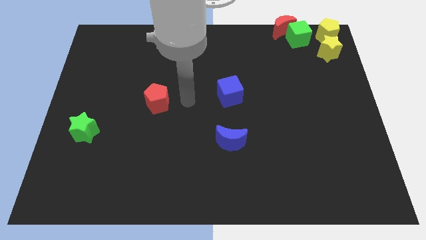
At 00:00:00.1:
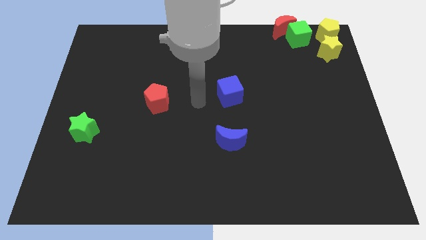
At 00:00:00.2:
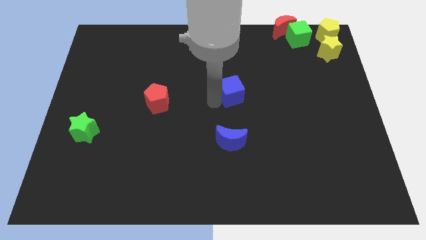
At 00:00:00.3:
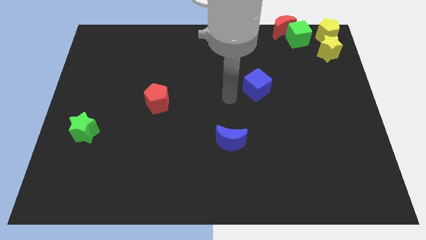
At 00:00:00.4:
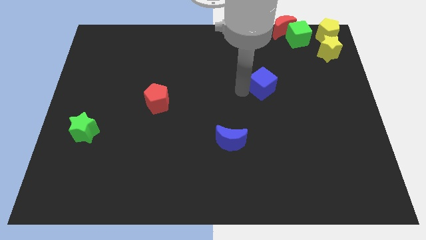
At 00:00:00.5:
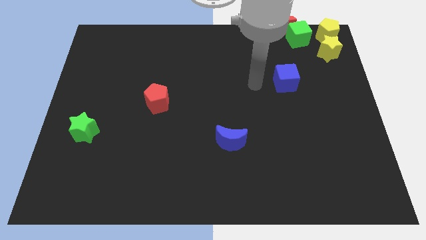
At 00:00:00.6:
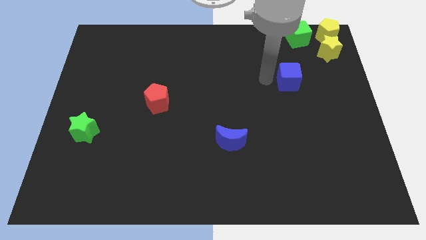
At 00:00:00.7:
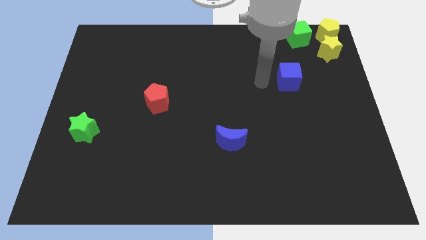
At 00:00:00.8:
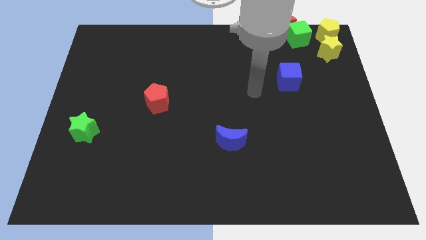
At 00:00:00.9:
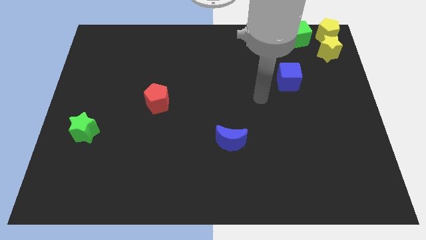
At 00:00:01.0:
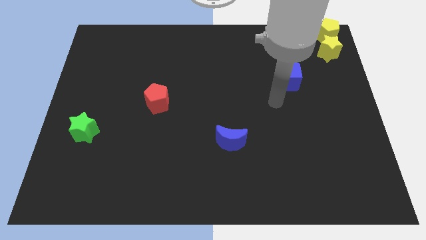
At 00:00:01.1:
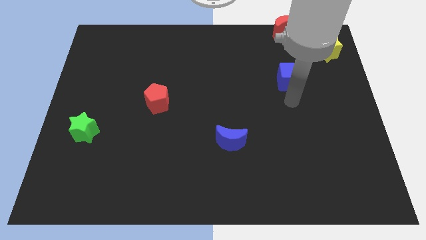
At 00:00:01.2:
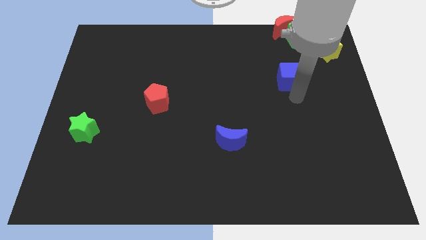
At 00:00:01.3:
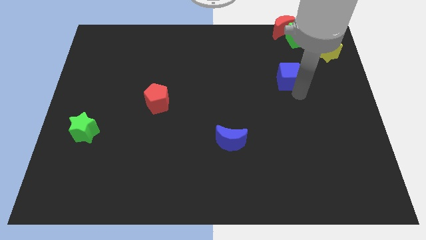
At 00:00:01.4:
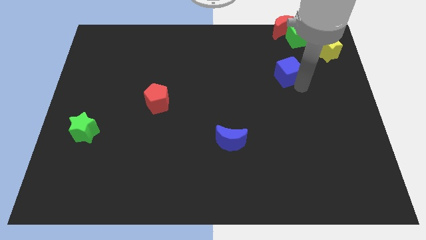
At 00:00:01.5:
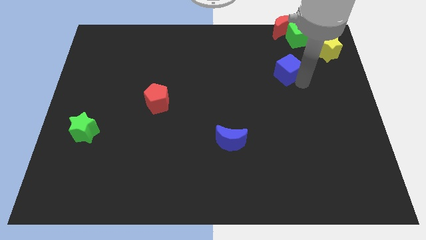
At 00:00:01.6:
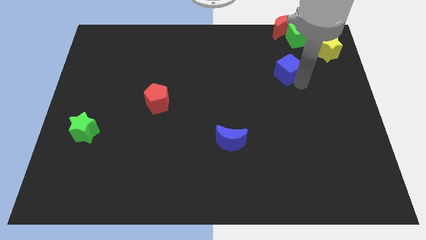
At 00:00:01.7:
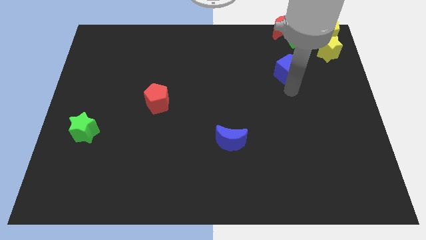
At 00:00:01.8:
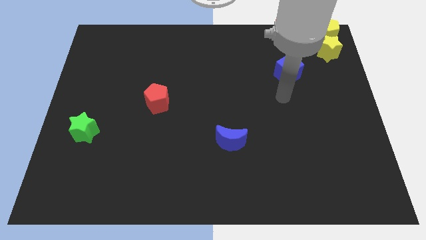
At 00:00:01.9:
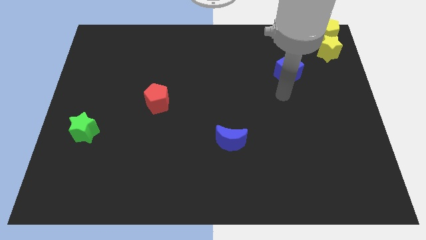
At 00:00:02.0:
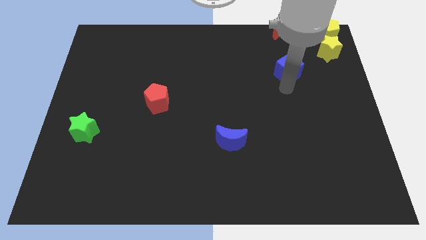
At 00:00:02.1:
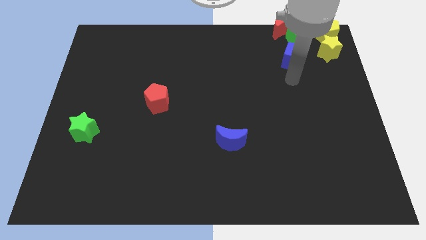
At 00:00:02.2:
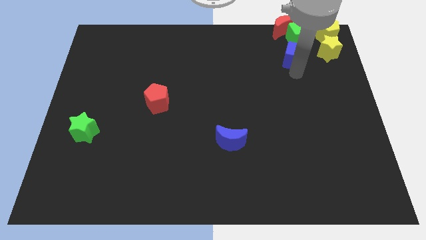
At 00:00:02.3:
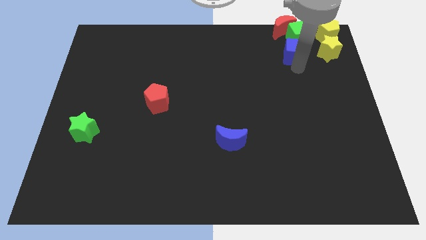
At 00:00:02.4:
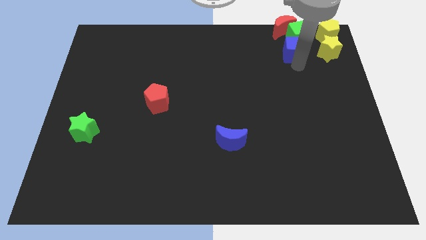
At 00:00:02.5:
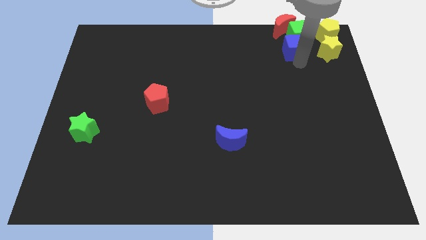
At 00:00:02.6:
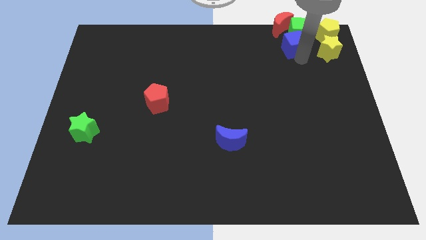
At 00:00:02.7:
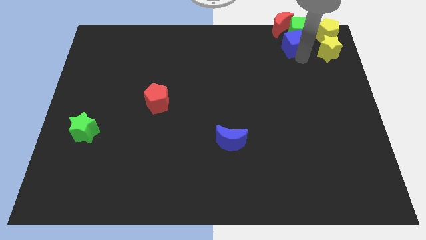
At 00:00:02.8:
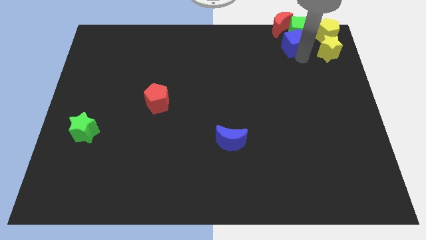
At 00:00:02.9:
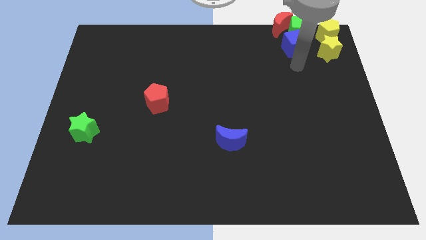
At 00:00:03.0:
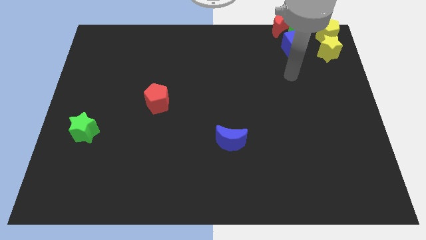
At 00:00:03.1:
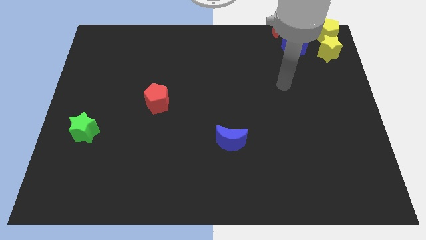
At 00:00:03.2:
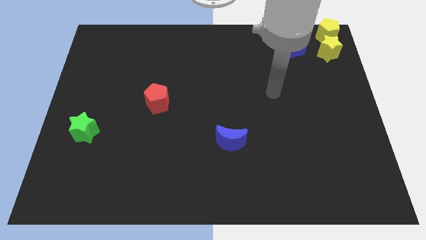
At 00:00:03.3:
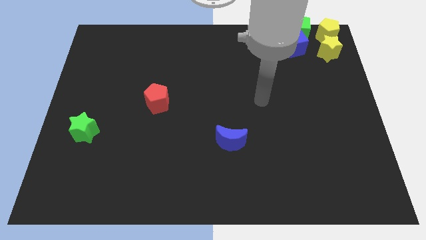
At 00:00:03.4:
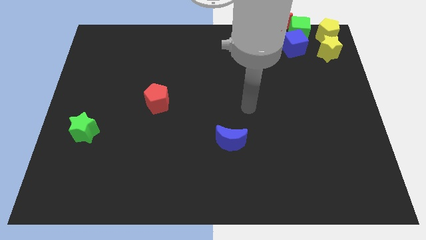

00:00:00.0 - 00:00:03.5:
move the blue cube into the bottom of the green cube

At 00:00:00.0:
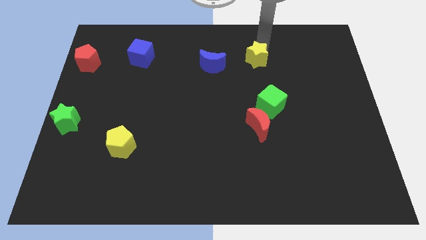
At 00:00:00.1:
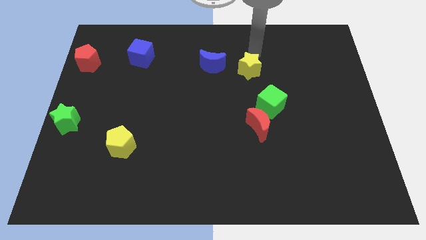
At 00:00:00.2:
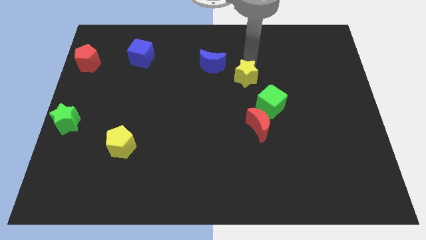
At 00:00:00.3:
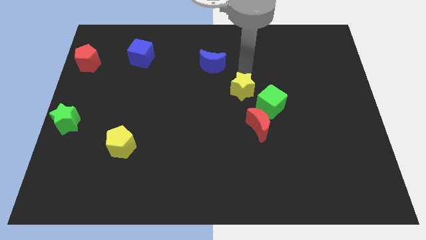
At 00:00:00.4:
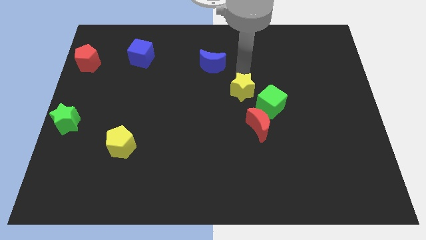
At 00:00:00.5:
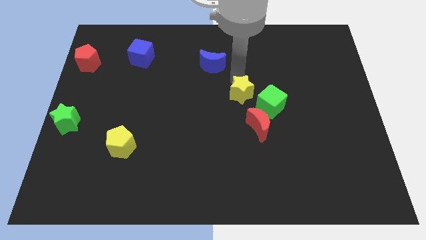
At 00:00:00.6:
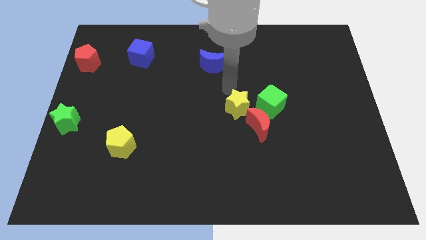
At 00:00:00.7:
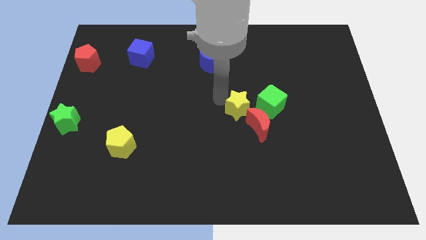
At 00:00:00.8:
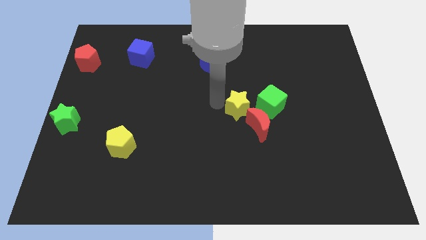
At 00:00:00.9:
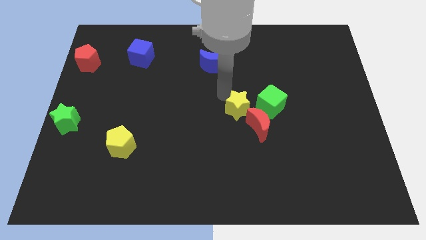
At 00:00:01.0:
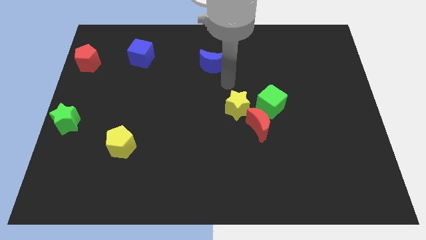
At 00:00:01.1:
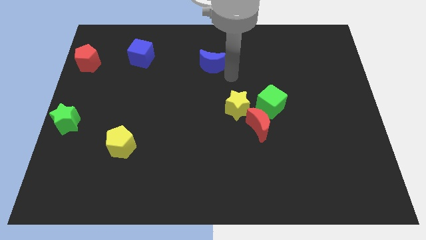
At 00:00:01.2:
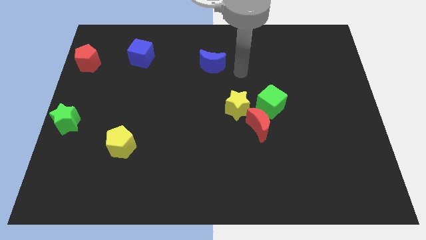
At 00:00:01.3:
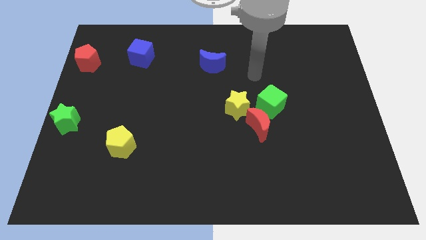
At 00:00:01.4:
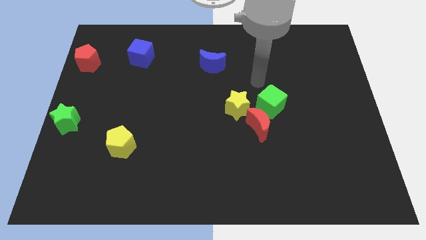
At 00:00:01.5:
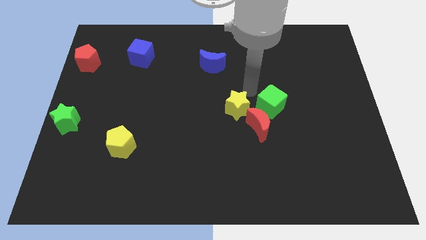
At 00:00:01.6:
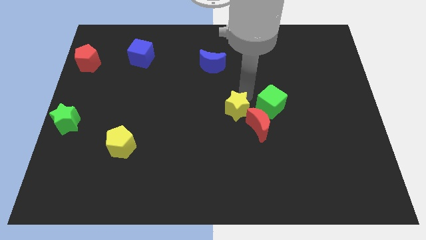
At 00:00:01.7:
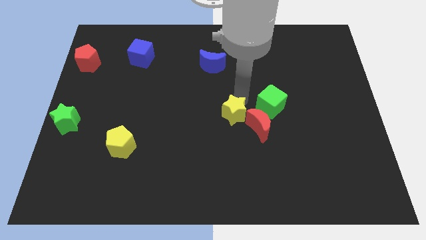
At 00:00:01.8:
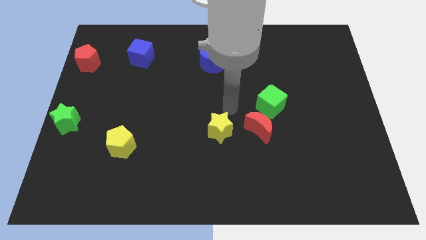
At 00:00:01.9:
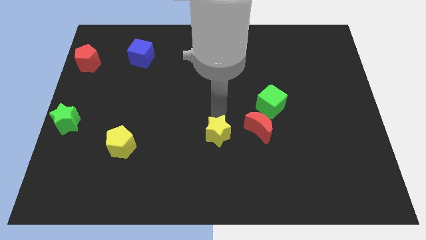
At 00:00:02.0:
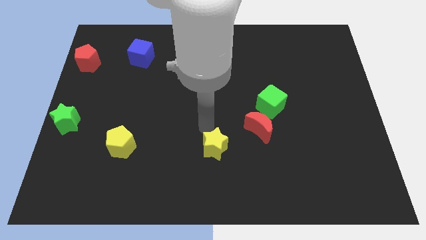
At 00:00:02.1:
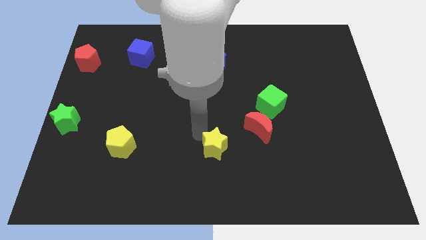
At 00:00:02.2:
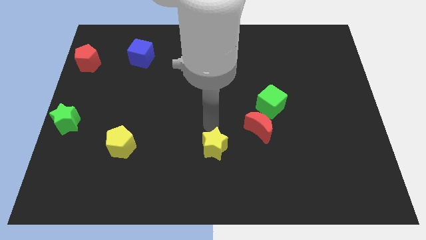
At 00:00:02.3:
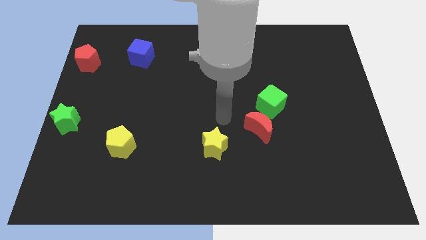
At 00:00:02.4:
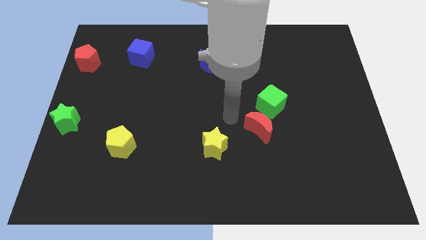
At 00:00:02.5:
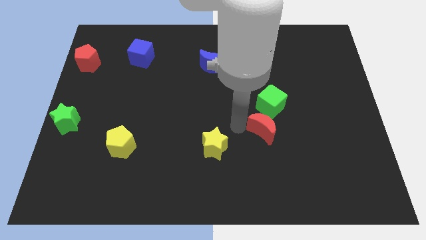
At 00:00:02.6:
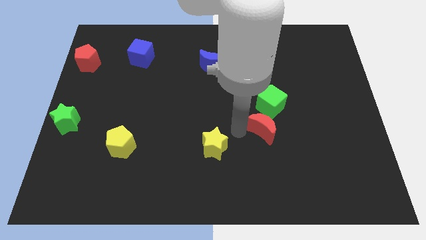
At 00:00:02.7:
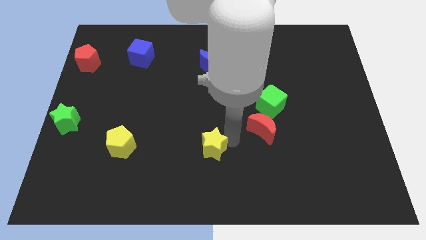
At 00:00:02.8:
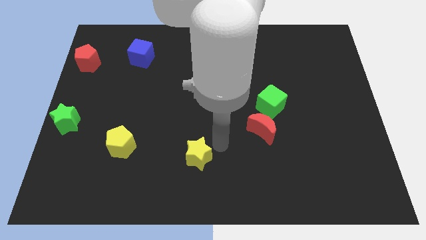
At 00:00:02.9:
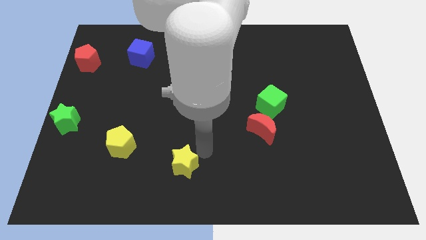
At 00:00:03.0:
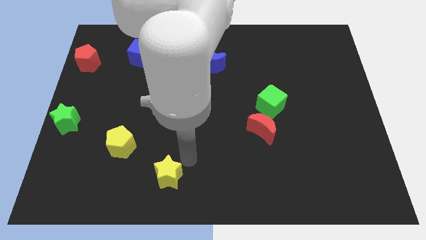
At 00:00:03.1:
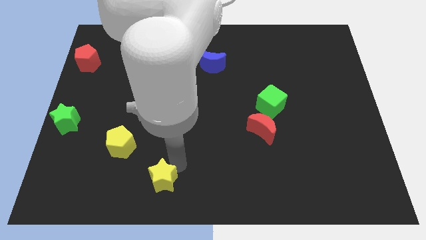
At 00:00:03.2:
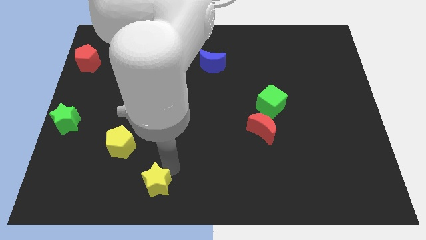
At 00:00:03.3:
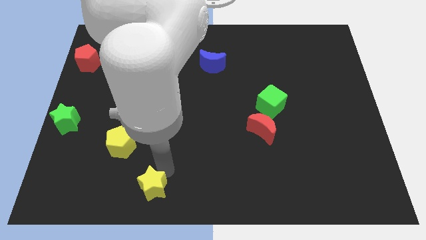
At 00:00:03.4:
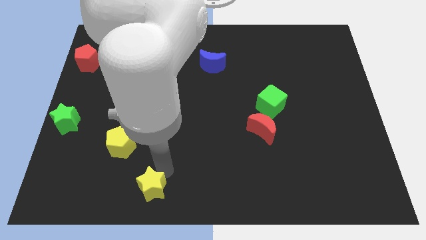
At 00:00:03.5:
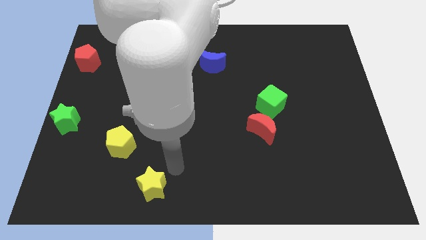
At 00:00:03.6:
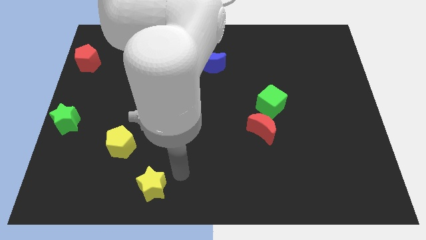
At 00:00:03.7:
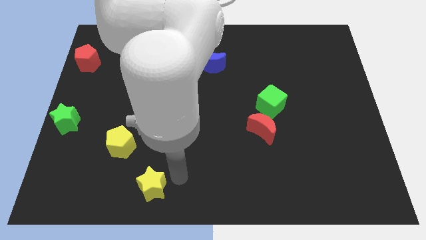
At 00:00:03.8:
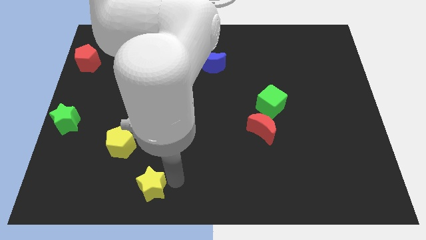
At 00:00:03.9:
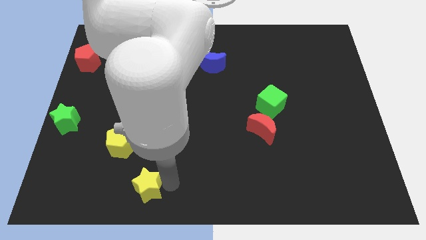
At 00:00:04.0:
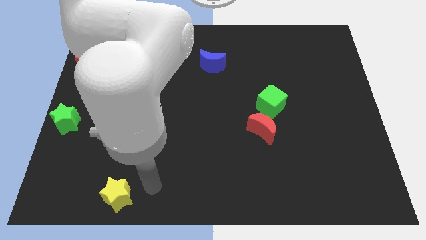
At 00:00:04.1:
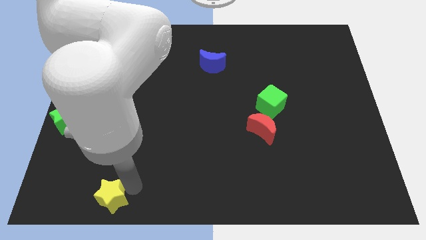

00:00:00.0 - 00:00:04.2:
place the yellow star diagonally right of the yellow pentagon

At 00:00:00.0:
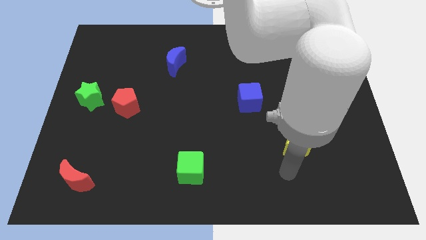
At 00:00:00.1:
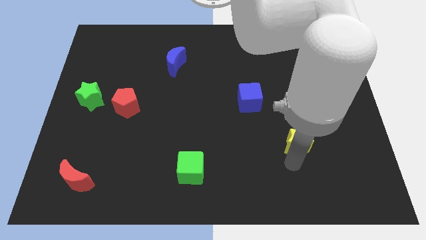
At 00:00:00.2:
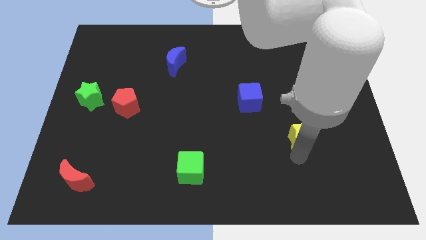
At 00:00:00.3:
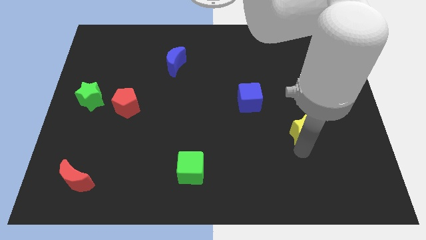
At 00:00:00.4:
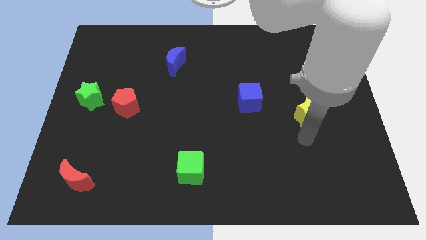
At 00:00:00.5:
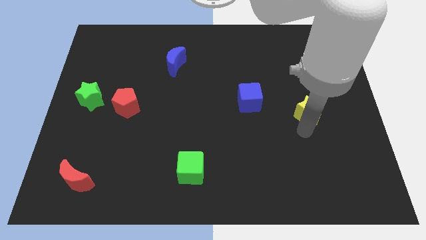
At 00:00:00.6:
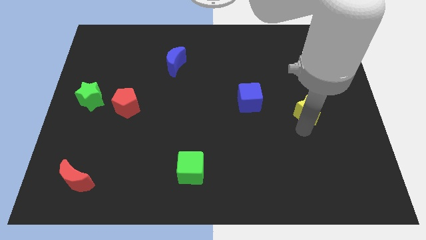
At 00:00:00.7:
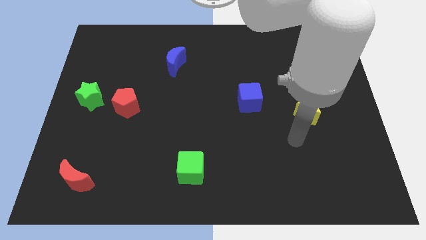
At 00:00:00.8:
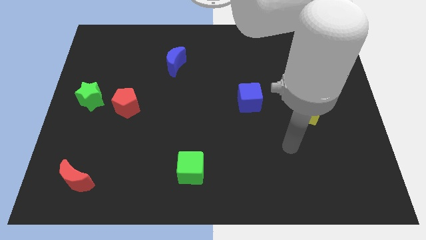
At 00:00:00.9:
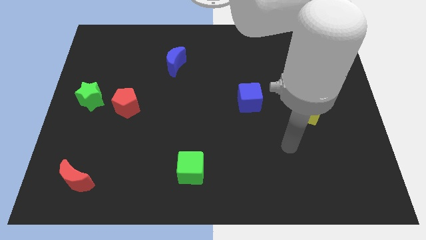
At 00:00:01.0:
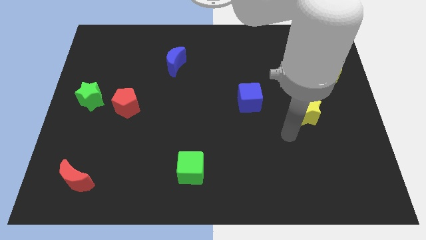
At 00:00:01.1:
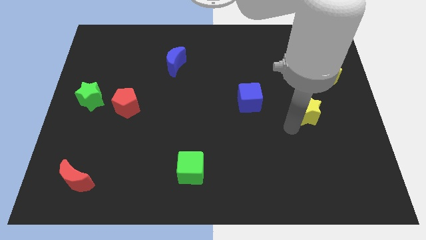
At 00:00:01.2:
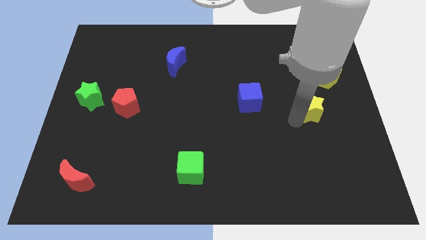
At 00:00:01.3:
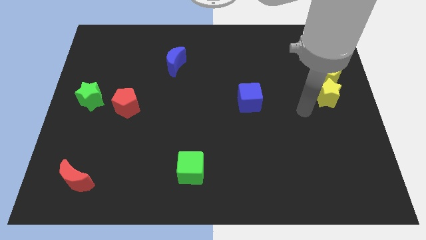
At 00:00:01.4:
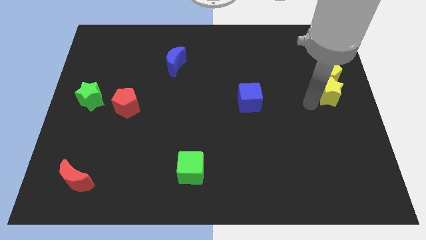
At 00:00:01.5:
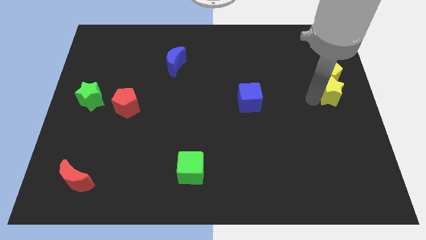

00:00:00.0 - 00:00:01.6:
push the yellow star bottom to the yellow pentagon
